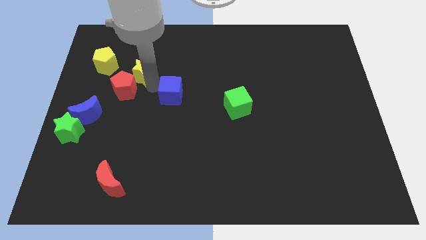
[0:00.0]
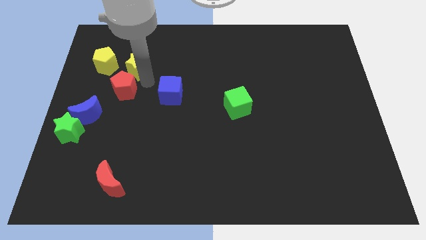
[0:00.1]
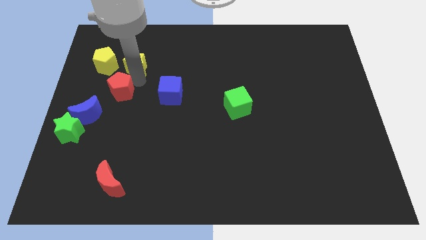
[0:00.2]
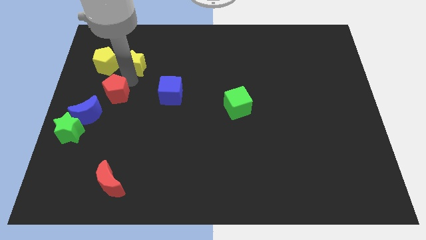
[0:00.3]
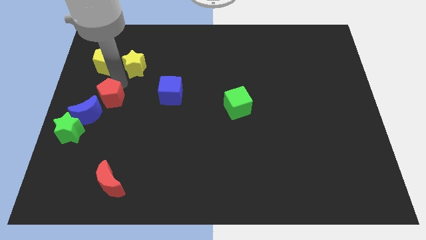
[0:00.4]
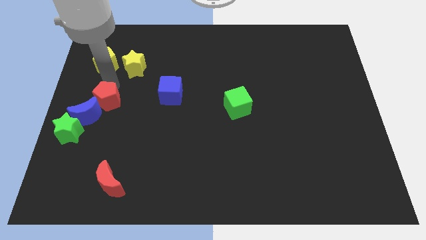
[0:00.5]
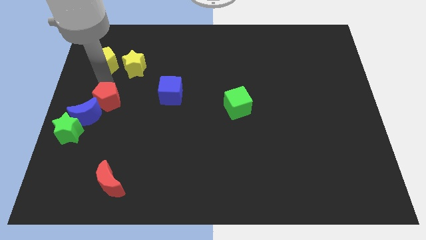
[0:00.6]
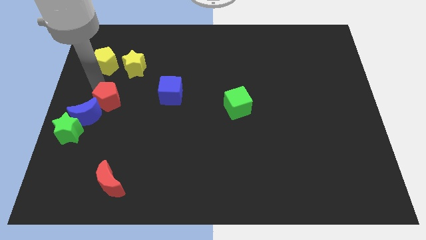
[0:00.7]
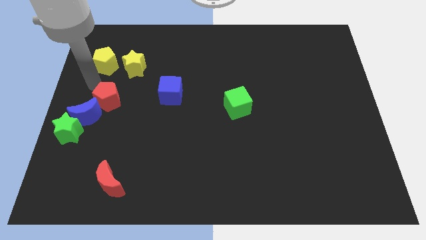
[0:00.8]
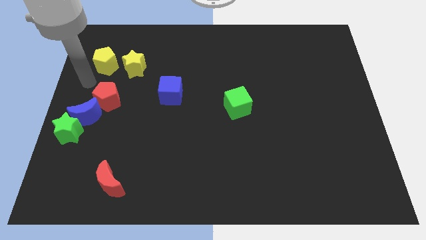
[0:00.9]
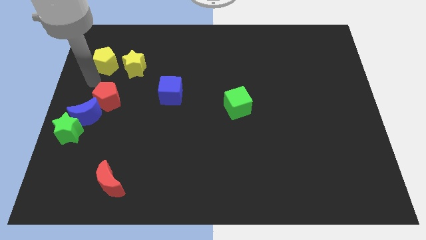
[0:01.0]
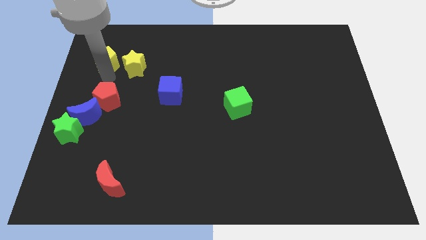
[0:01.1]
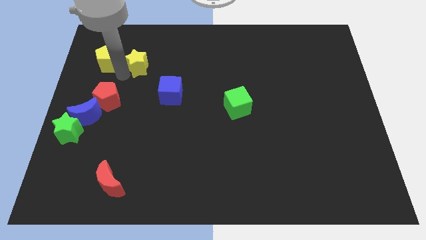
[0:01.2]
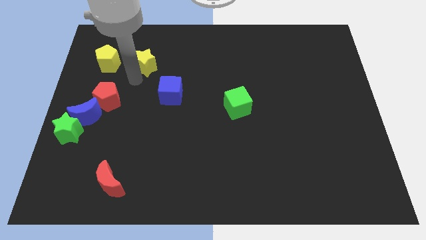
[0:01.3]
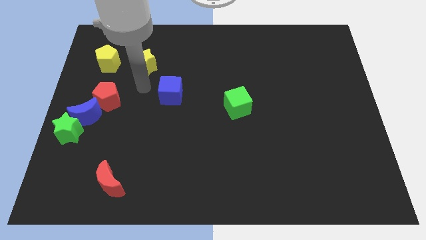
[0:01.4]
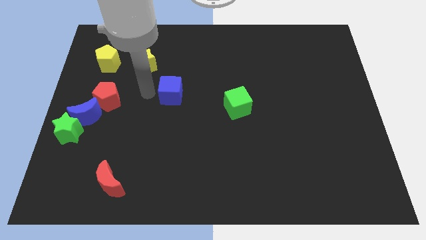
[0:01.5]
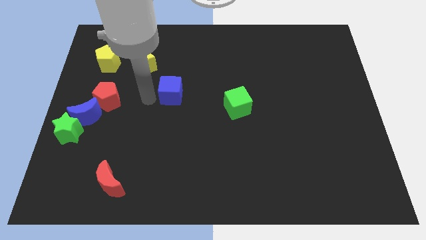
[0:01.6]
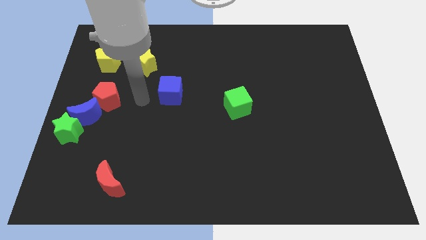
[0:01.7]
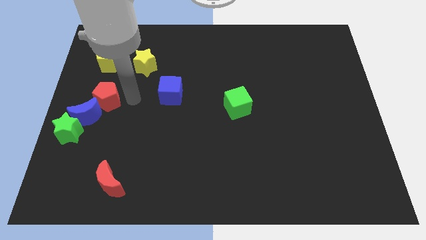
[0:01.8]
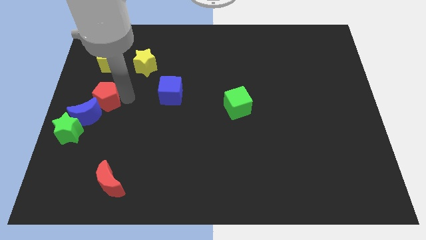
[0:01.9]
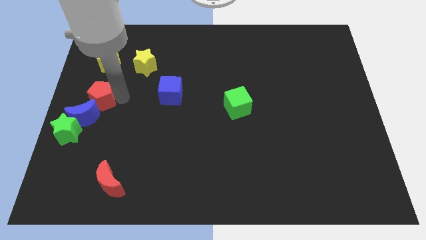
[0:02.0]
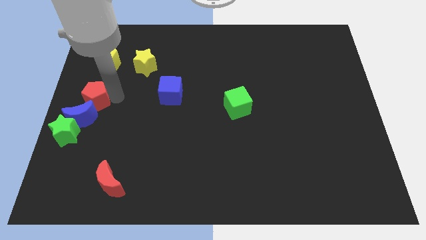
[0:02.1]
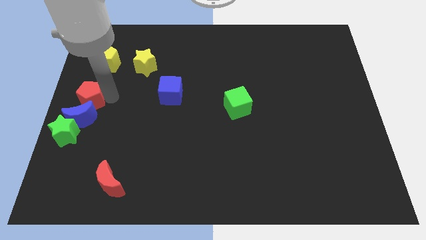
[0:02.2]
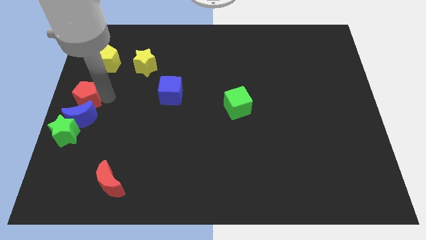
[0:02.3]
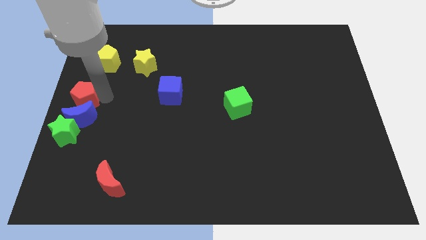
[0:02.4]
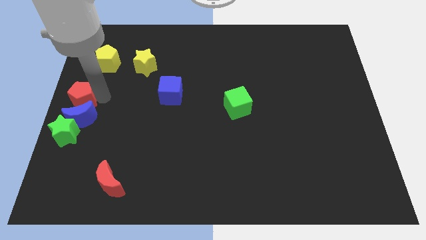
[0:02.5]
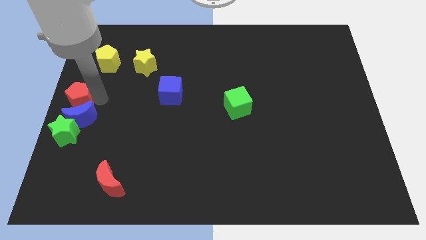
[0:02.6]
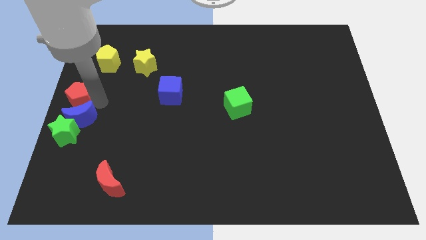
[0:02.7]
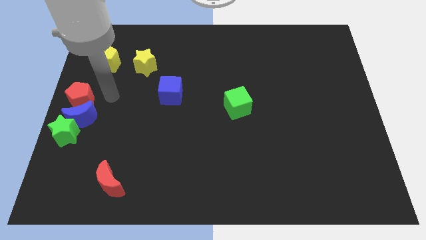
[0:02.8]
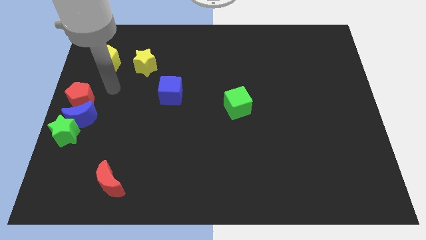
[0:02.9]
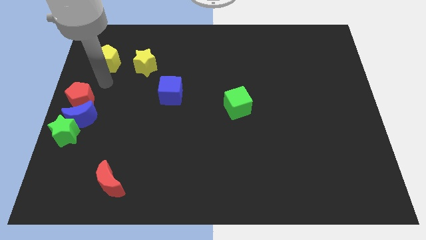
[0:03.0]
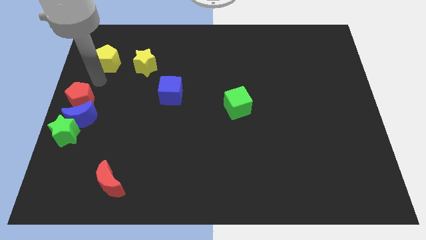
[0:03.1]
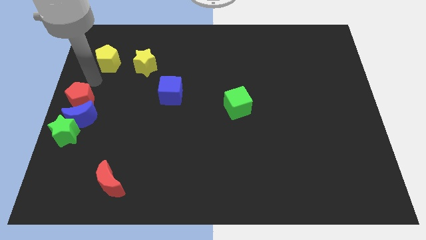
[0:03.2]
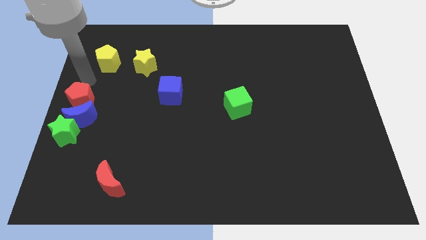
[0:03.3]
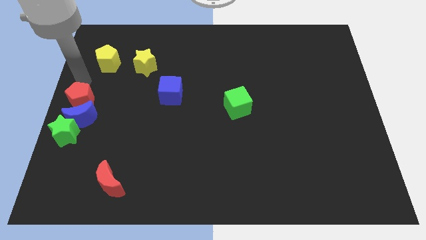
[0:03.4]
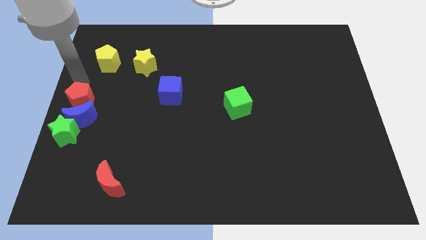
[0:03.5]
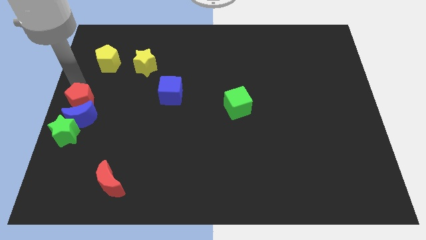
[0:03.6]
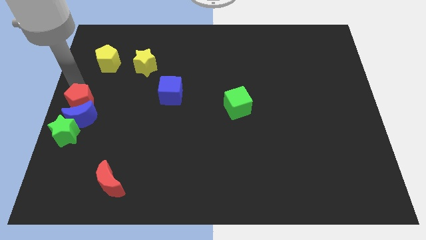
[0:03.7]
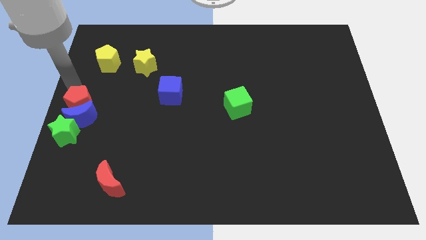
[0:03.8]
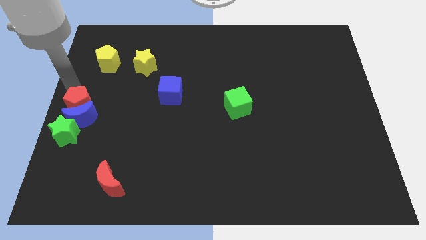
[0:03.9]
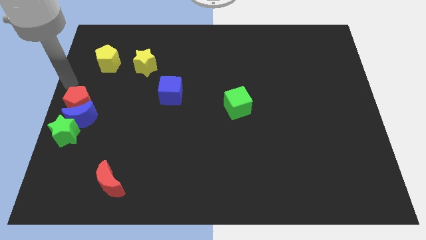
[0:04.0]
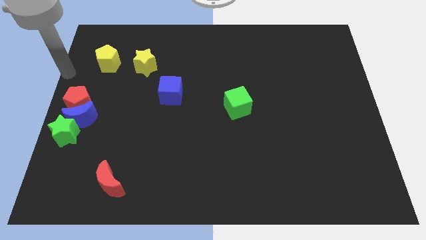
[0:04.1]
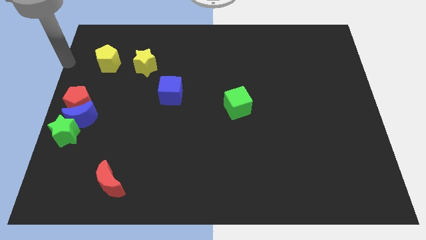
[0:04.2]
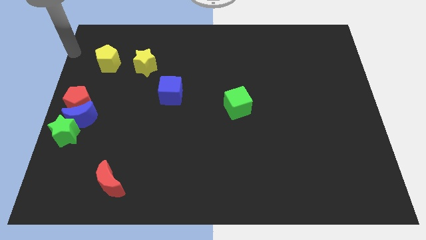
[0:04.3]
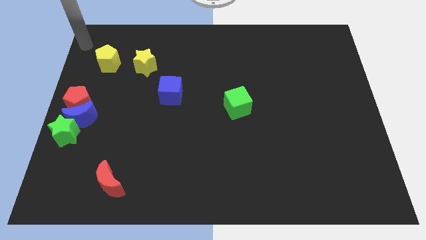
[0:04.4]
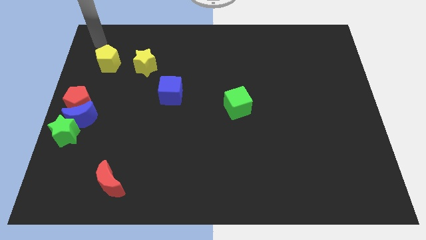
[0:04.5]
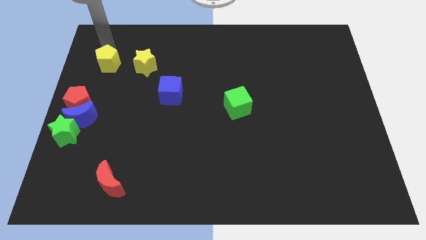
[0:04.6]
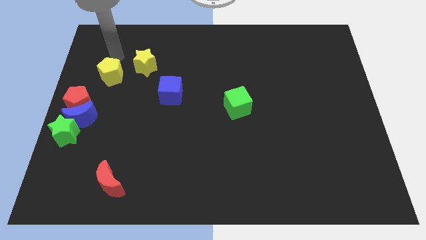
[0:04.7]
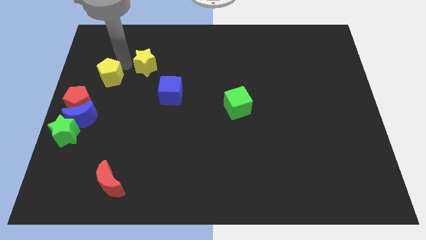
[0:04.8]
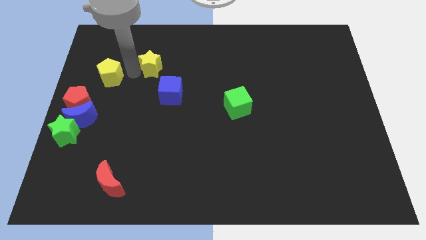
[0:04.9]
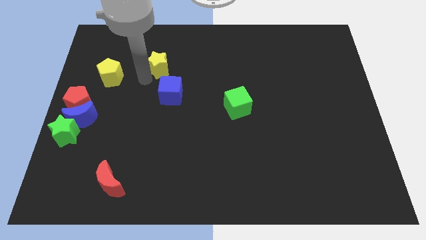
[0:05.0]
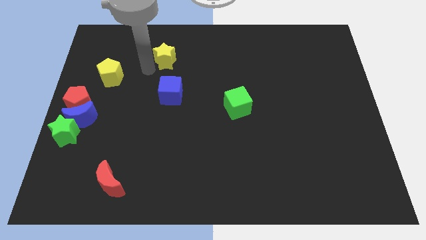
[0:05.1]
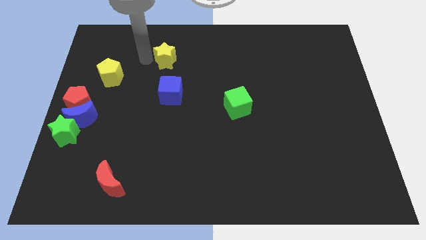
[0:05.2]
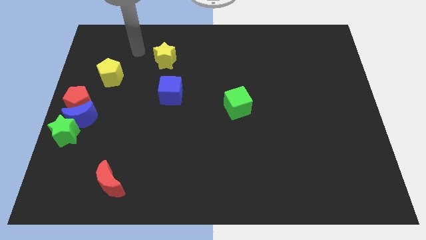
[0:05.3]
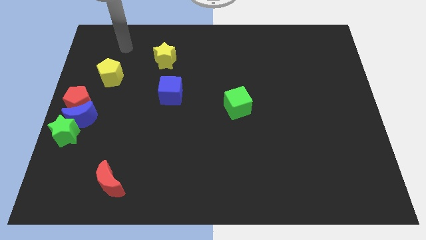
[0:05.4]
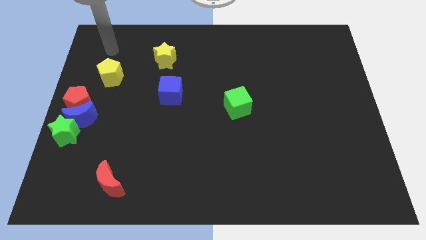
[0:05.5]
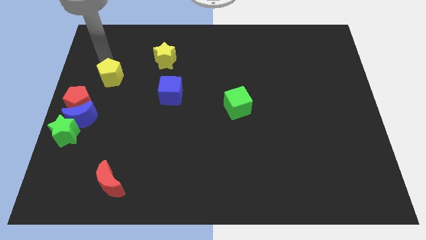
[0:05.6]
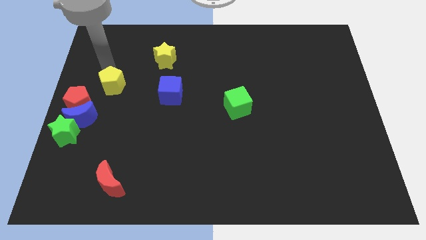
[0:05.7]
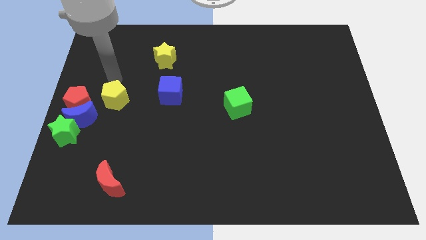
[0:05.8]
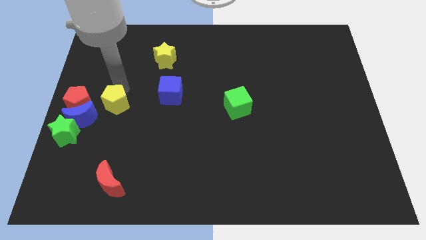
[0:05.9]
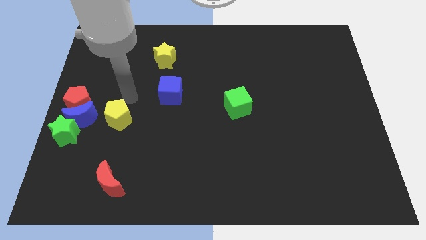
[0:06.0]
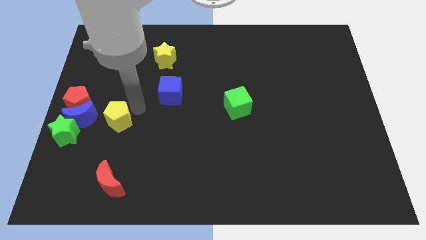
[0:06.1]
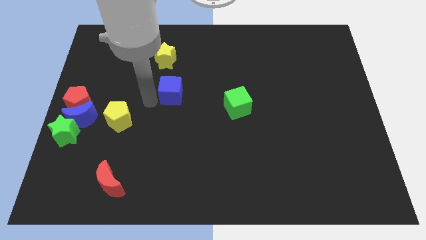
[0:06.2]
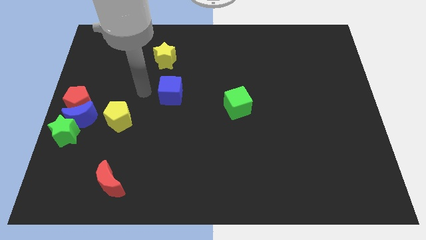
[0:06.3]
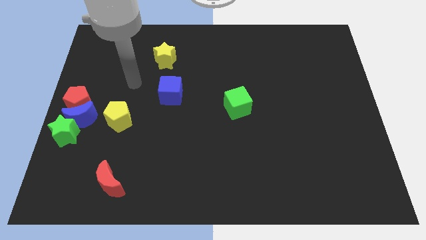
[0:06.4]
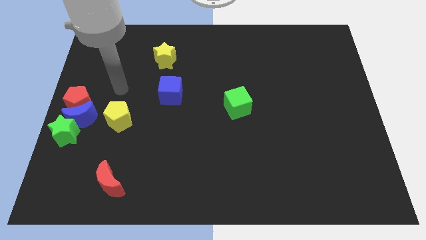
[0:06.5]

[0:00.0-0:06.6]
push a group of blocks to the left side of the board

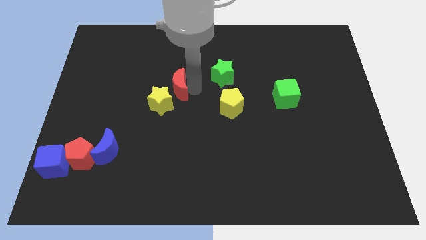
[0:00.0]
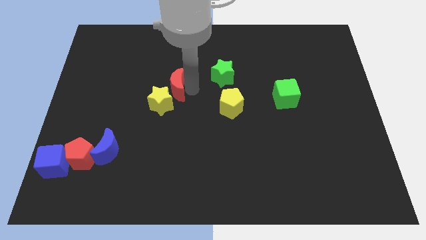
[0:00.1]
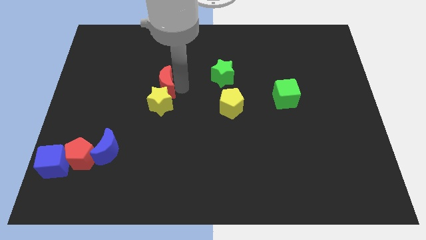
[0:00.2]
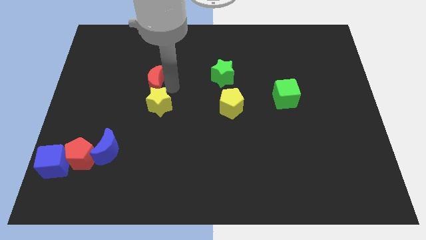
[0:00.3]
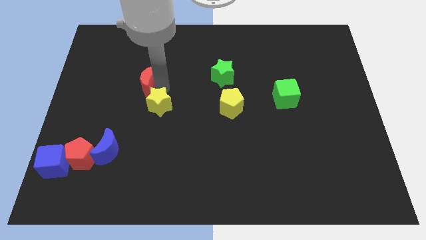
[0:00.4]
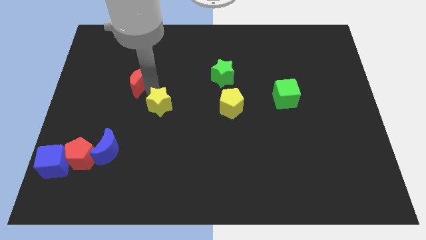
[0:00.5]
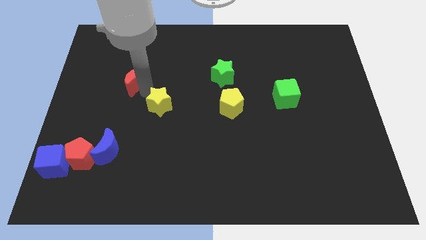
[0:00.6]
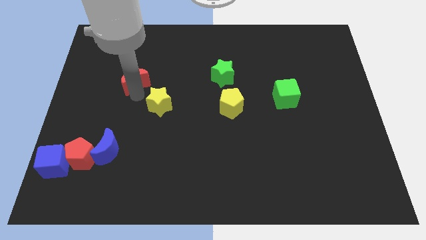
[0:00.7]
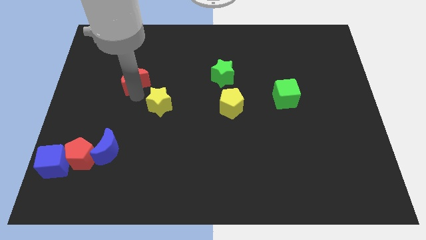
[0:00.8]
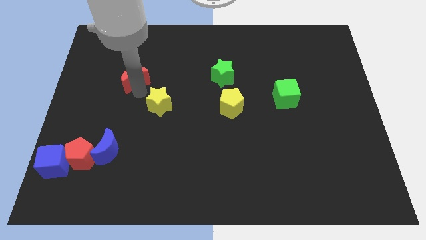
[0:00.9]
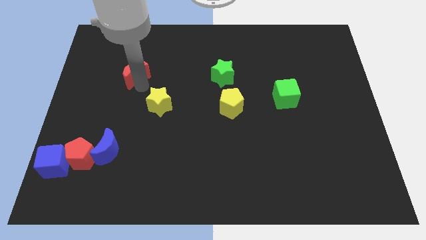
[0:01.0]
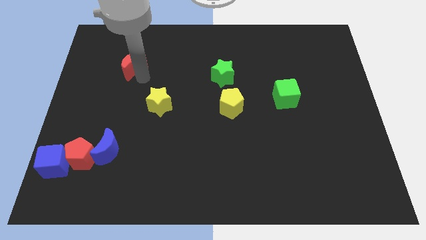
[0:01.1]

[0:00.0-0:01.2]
separate red moon from the yeloow star

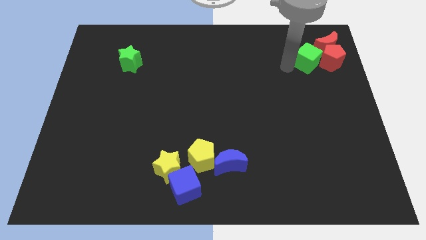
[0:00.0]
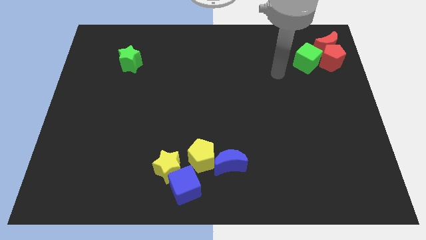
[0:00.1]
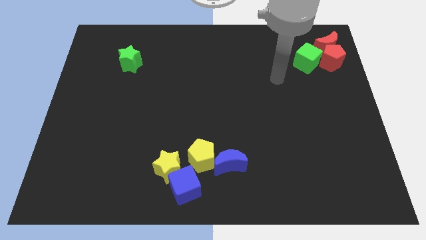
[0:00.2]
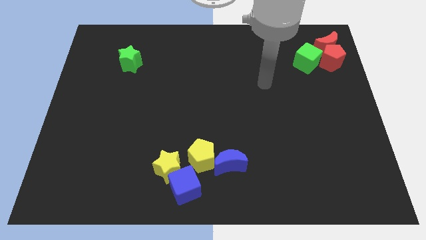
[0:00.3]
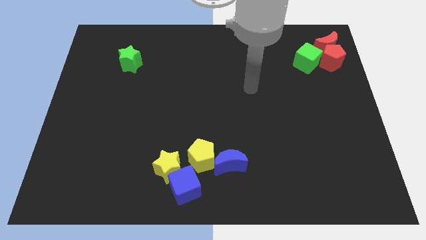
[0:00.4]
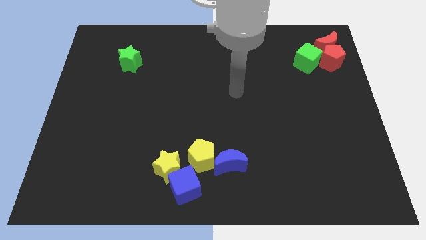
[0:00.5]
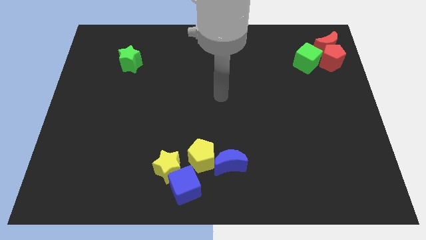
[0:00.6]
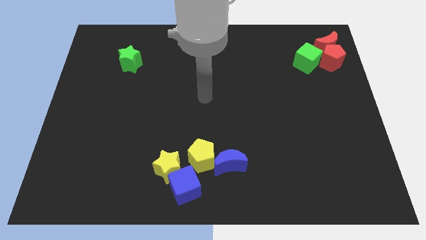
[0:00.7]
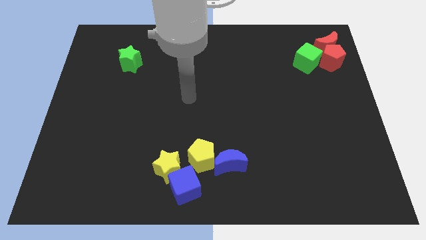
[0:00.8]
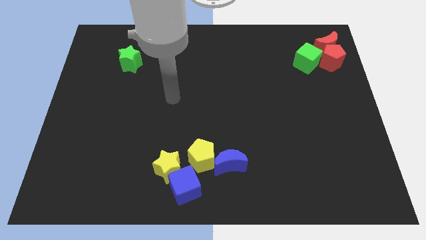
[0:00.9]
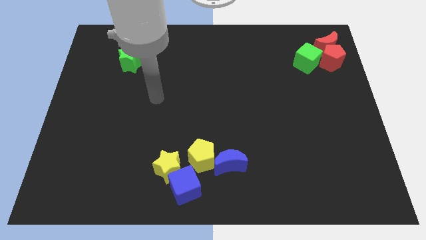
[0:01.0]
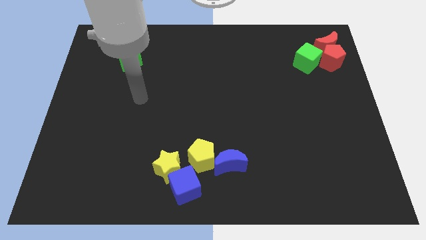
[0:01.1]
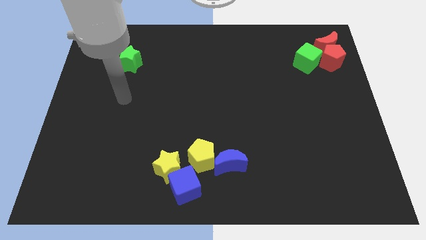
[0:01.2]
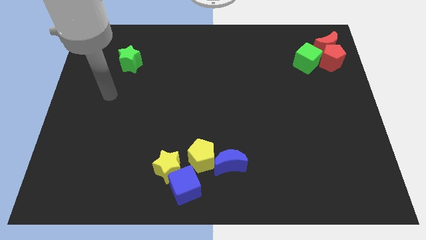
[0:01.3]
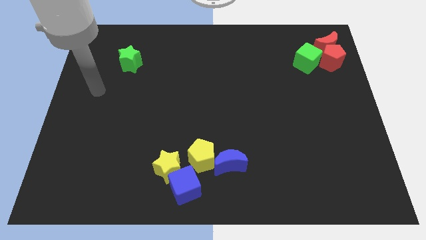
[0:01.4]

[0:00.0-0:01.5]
move your arm away from the green cube
